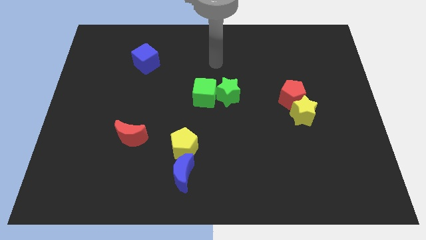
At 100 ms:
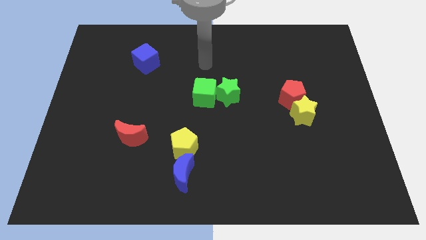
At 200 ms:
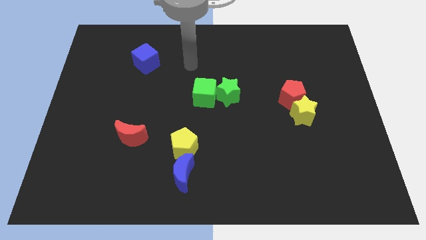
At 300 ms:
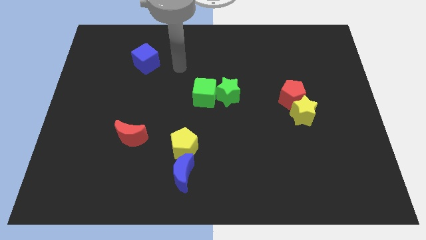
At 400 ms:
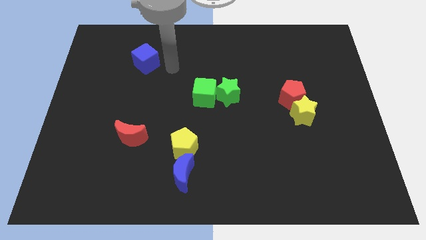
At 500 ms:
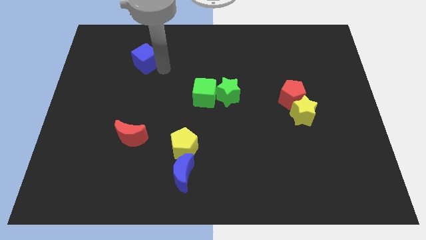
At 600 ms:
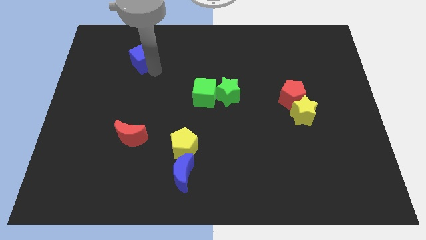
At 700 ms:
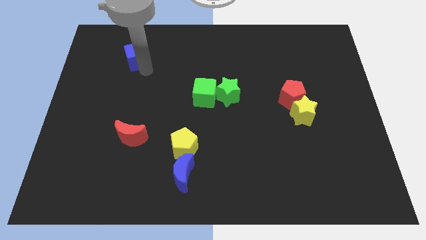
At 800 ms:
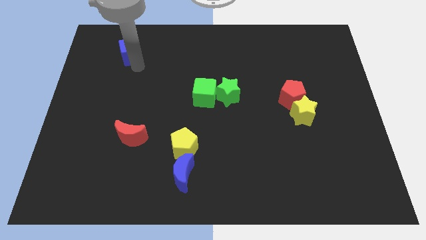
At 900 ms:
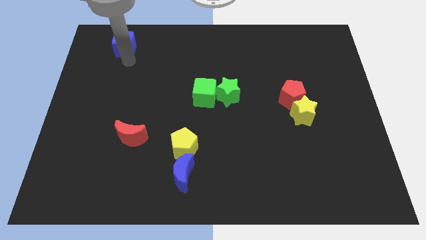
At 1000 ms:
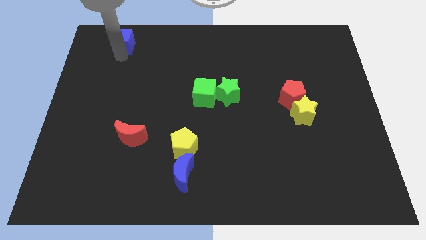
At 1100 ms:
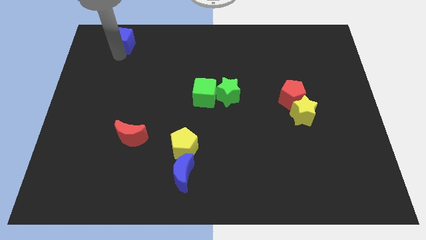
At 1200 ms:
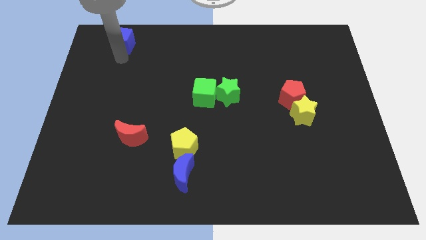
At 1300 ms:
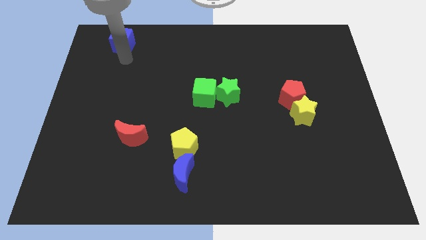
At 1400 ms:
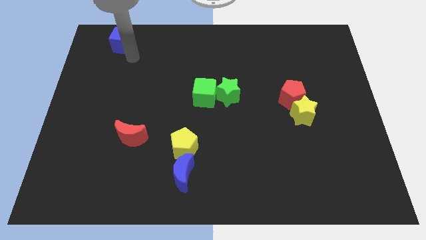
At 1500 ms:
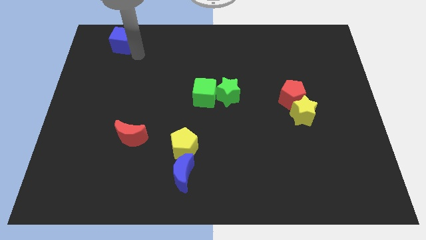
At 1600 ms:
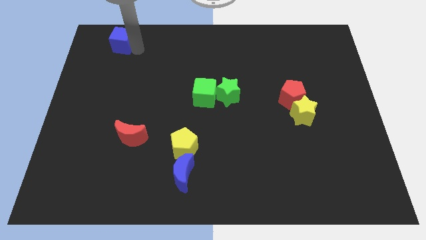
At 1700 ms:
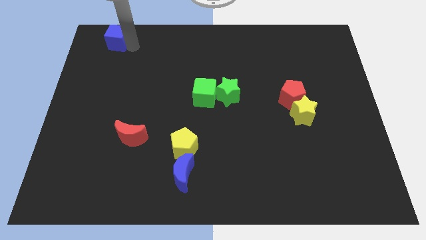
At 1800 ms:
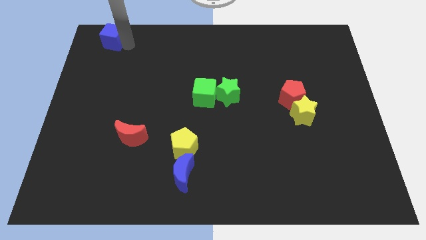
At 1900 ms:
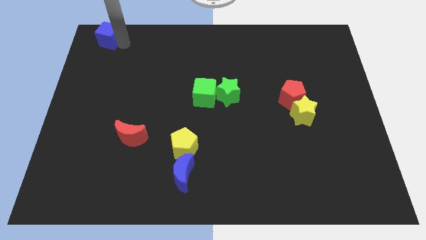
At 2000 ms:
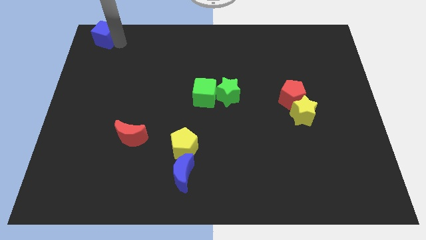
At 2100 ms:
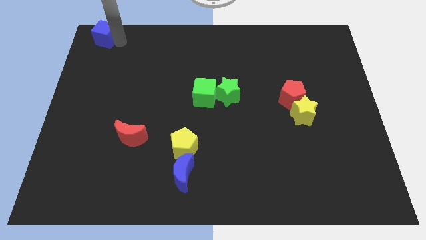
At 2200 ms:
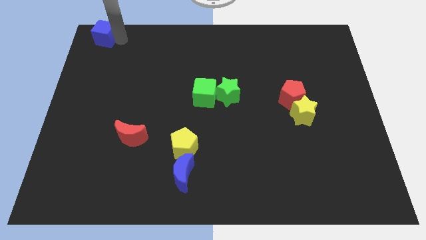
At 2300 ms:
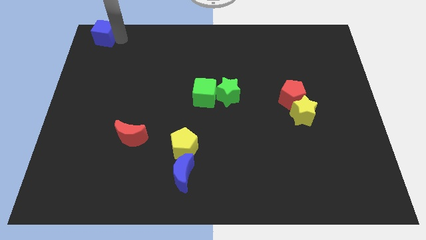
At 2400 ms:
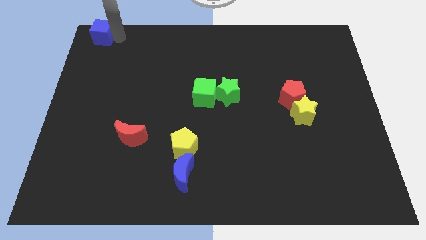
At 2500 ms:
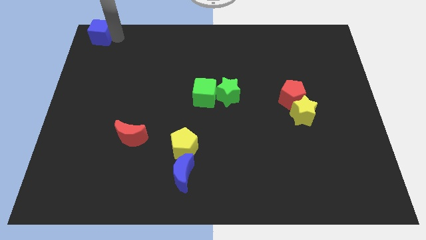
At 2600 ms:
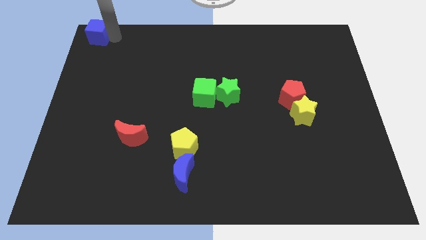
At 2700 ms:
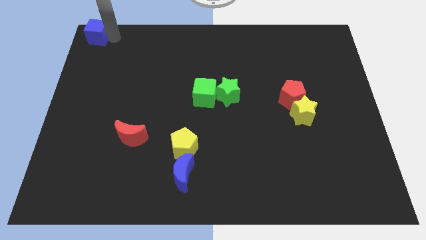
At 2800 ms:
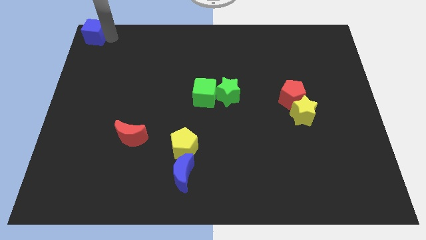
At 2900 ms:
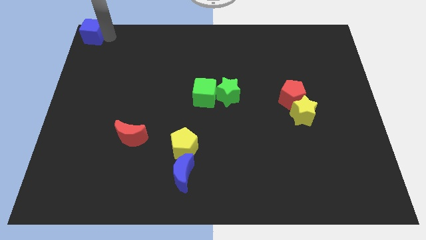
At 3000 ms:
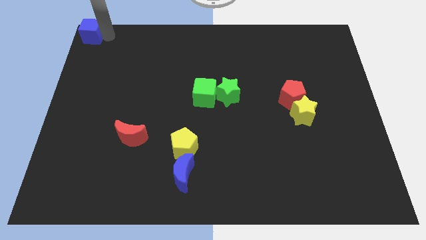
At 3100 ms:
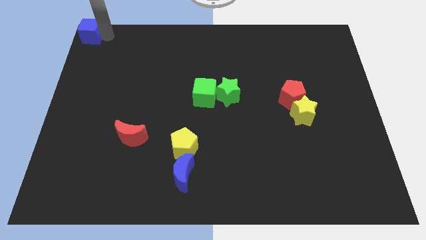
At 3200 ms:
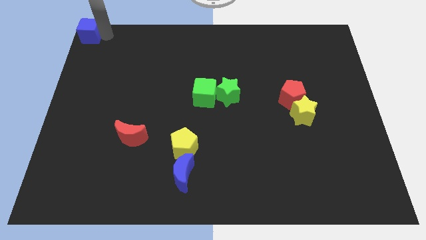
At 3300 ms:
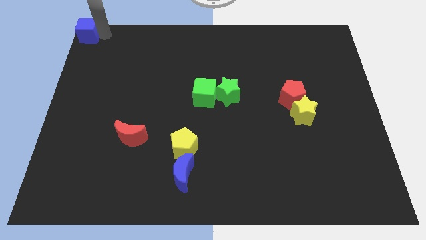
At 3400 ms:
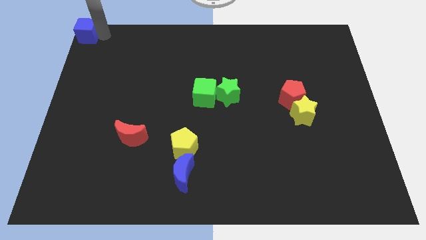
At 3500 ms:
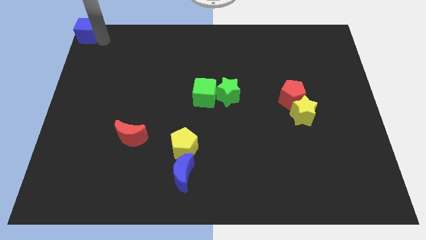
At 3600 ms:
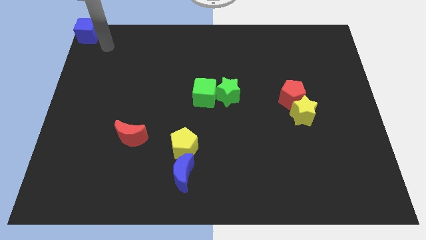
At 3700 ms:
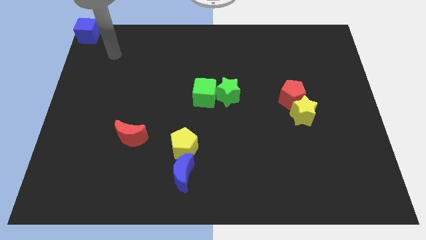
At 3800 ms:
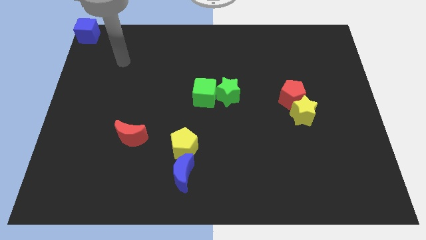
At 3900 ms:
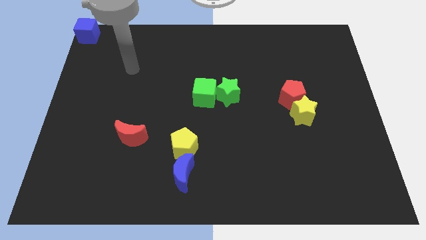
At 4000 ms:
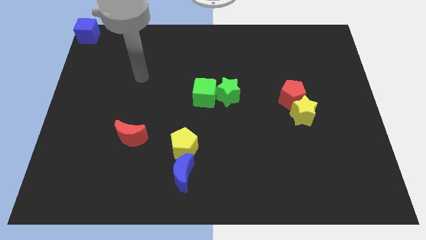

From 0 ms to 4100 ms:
push the blue cube to the top left corner

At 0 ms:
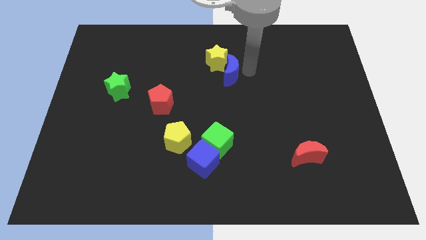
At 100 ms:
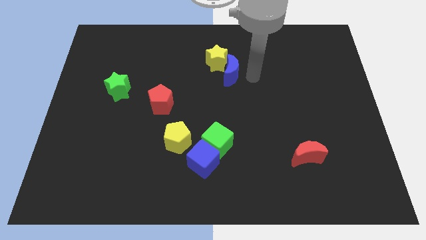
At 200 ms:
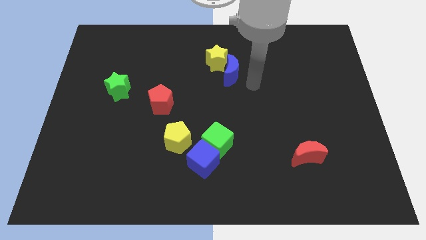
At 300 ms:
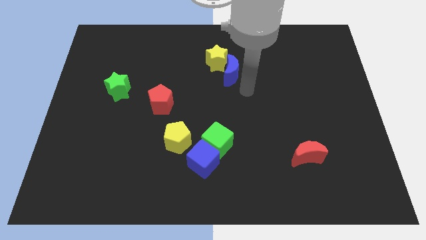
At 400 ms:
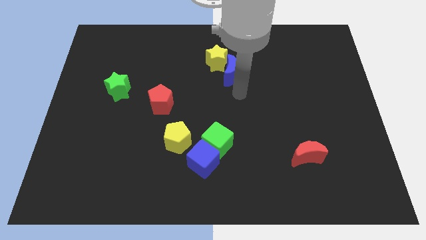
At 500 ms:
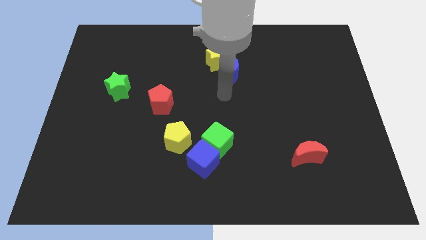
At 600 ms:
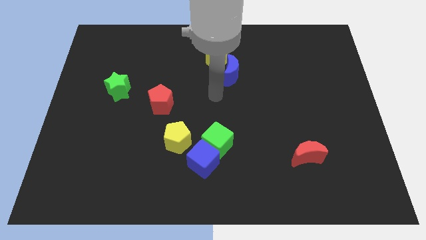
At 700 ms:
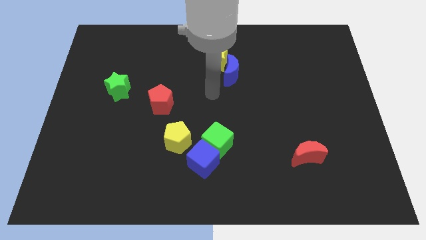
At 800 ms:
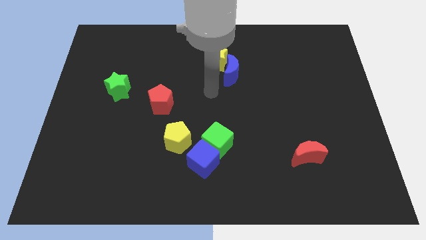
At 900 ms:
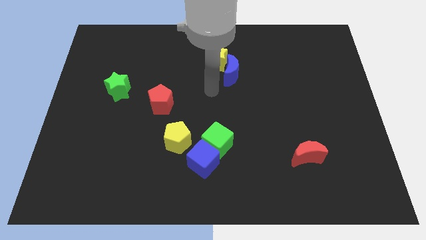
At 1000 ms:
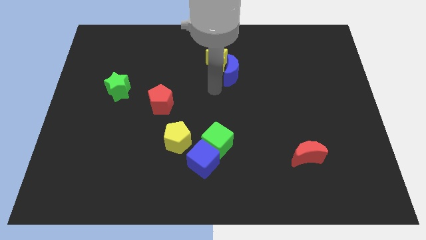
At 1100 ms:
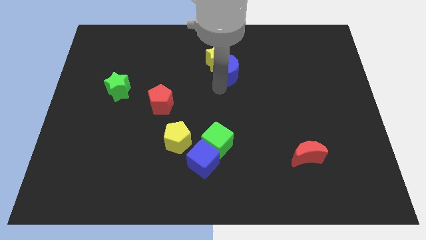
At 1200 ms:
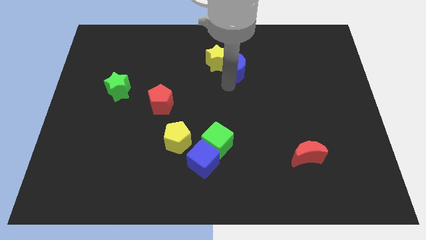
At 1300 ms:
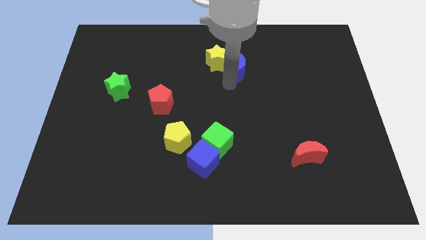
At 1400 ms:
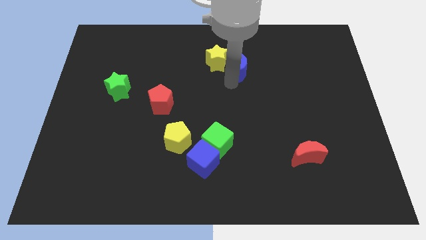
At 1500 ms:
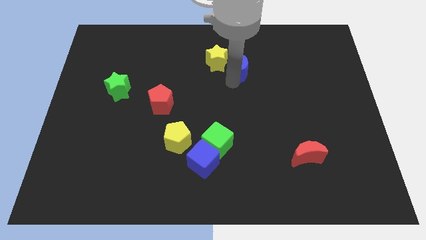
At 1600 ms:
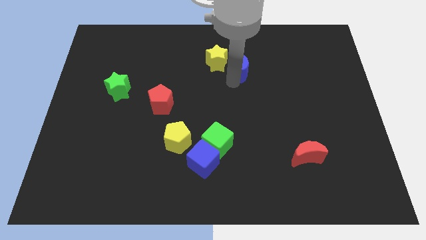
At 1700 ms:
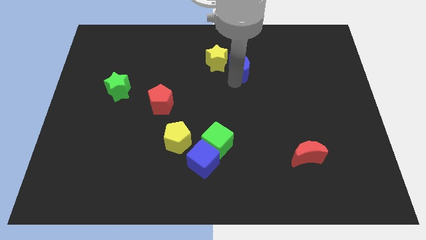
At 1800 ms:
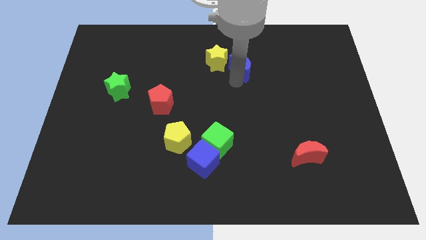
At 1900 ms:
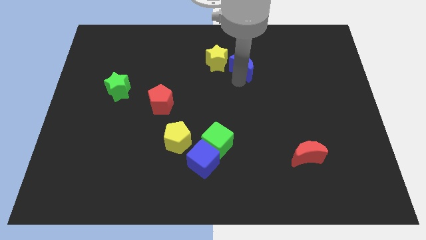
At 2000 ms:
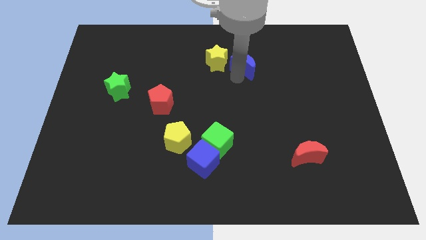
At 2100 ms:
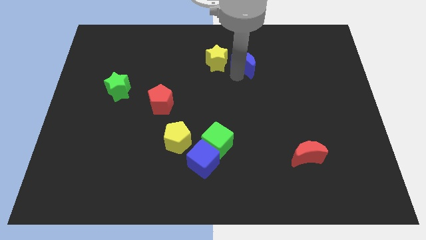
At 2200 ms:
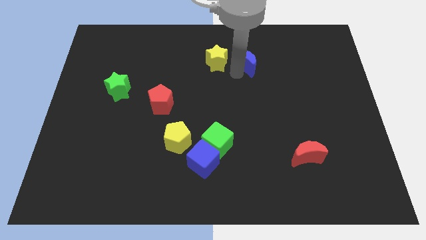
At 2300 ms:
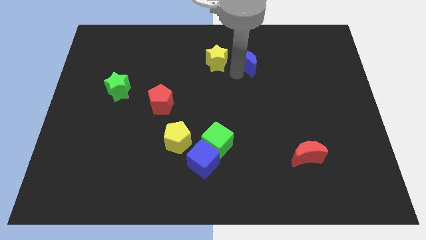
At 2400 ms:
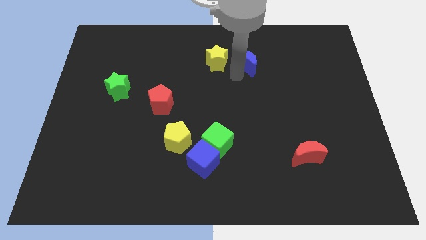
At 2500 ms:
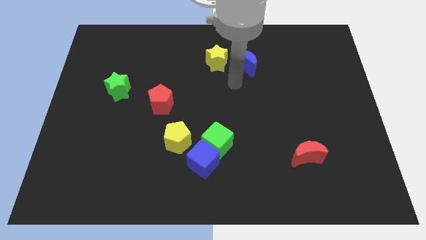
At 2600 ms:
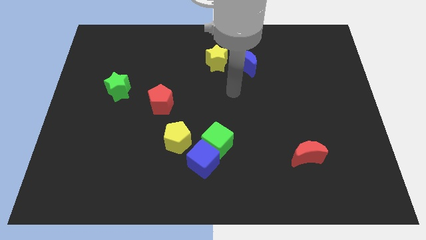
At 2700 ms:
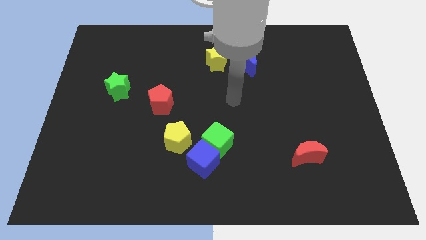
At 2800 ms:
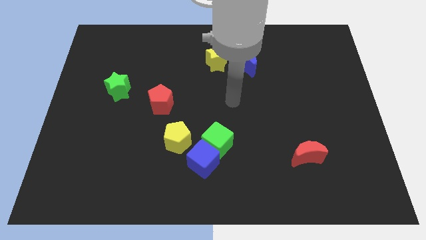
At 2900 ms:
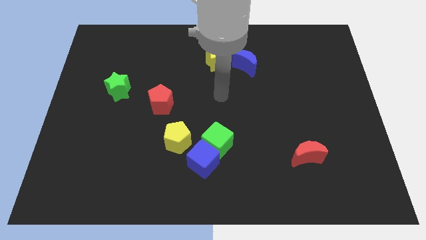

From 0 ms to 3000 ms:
push blue moon slightly upwards

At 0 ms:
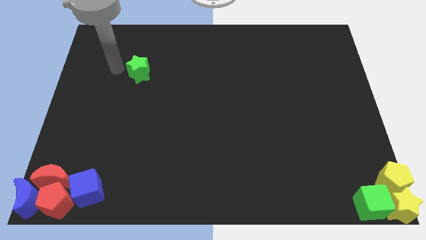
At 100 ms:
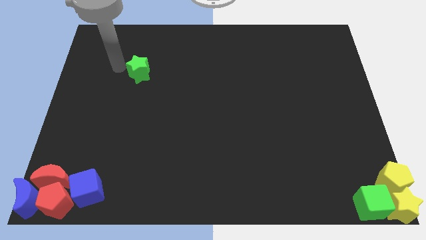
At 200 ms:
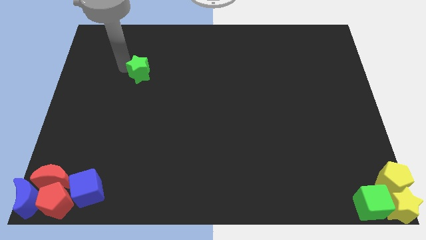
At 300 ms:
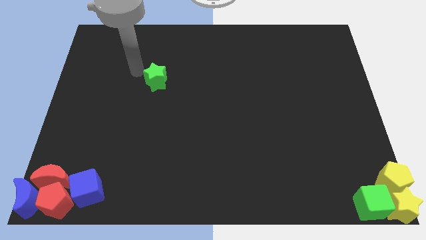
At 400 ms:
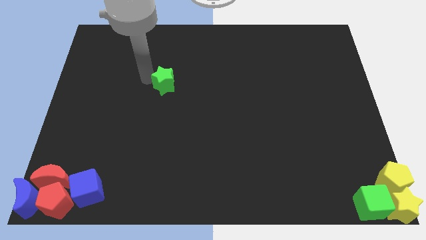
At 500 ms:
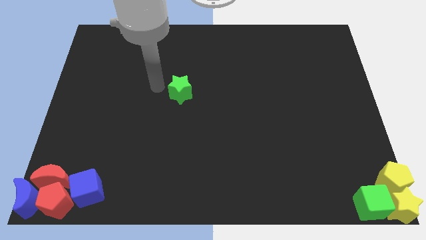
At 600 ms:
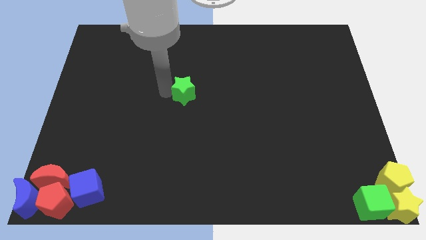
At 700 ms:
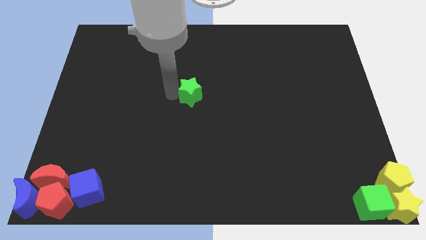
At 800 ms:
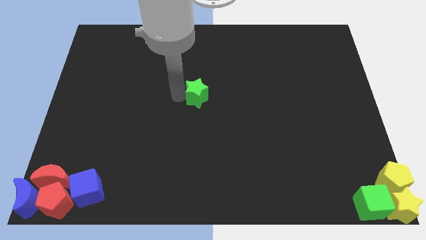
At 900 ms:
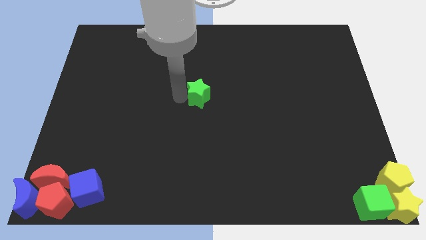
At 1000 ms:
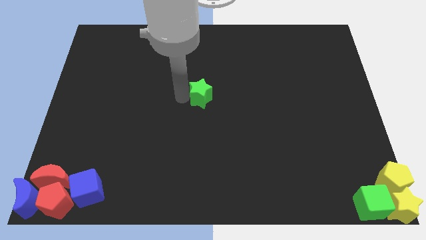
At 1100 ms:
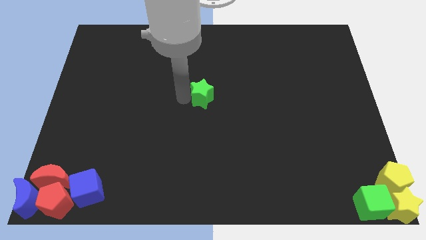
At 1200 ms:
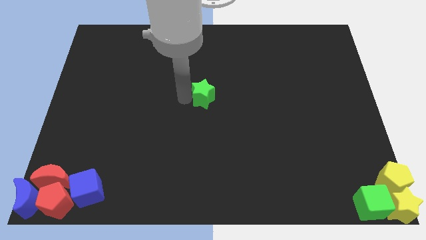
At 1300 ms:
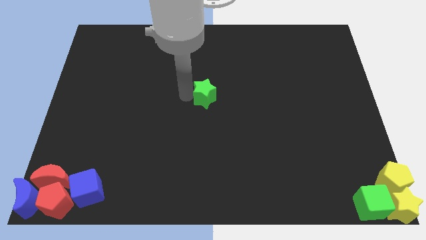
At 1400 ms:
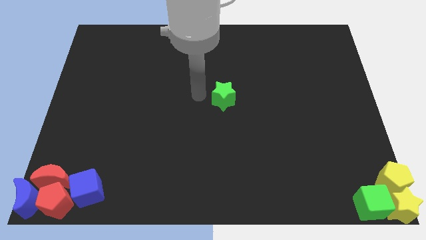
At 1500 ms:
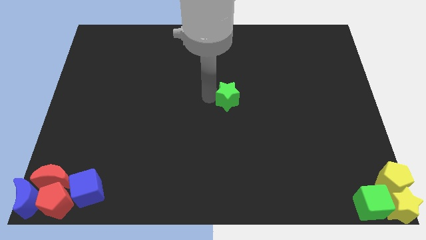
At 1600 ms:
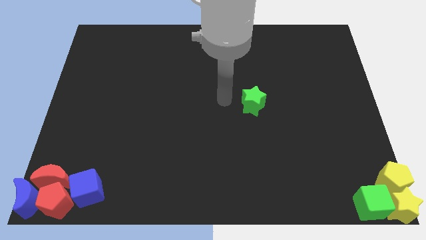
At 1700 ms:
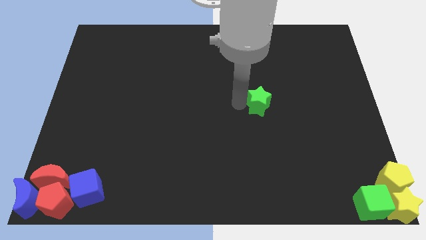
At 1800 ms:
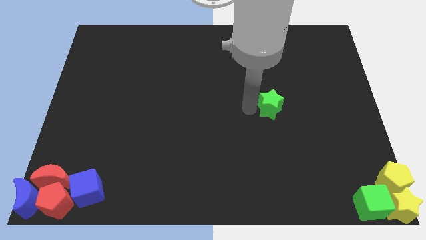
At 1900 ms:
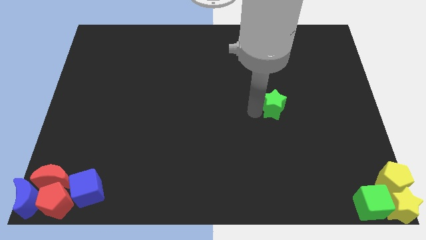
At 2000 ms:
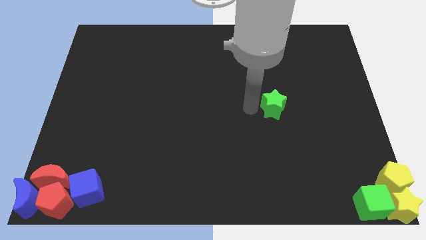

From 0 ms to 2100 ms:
place the green star in the middle
